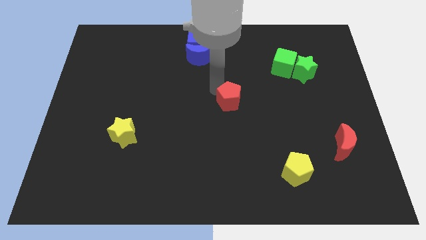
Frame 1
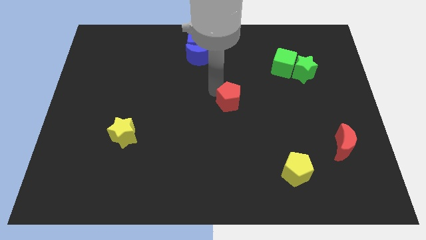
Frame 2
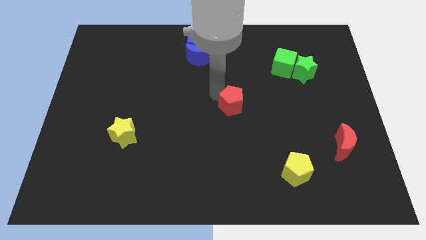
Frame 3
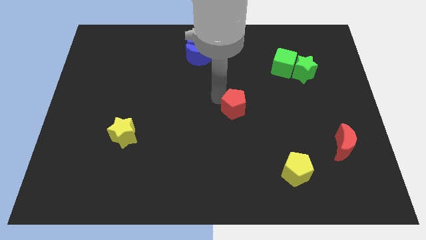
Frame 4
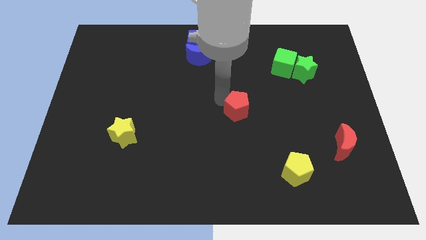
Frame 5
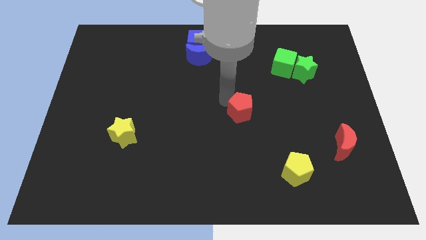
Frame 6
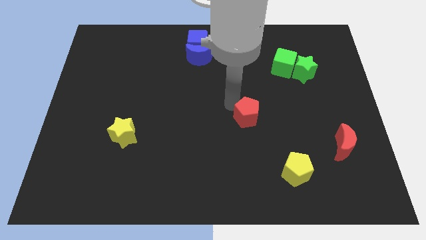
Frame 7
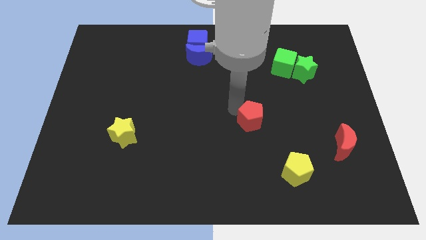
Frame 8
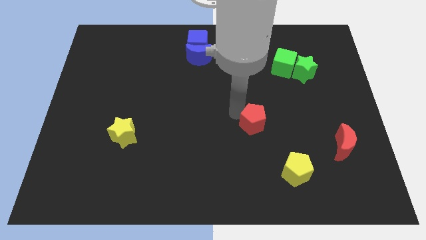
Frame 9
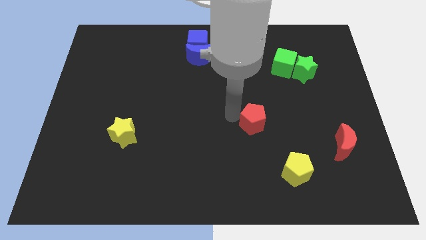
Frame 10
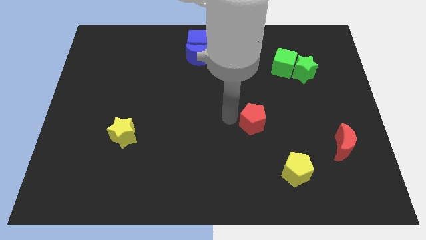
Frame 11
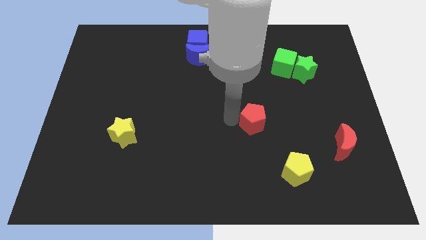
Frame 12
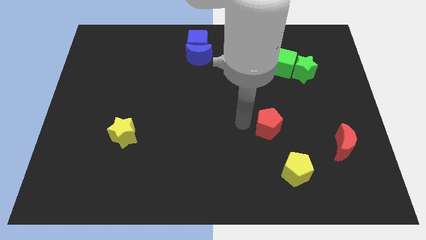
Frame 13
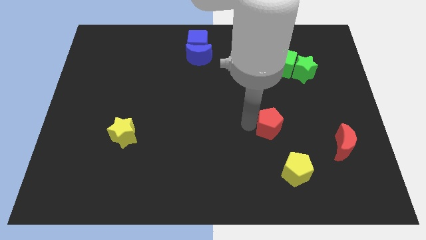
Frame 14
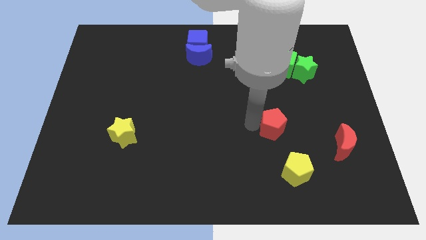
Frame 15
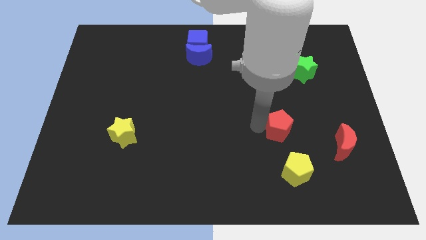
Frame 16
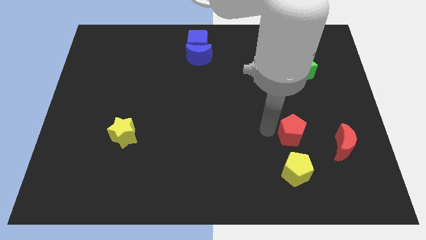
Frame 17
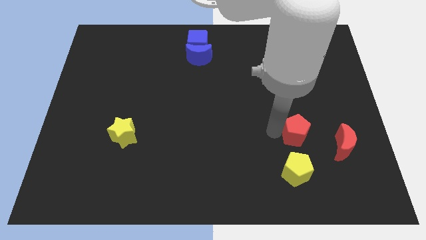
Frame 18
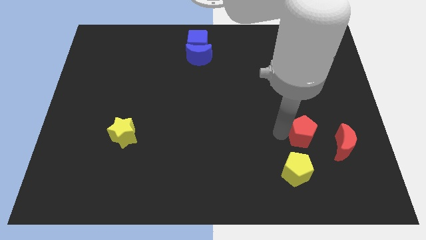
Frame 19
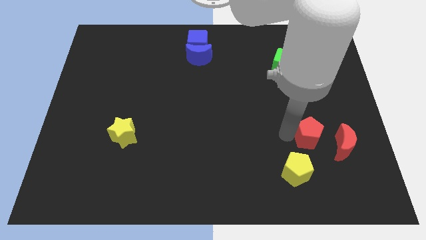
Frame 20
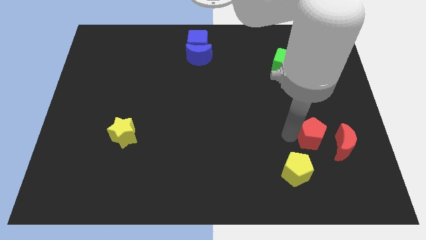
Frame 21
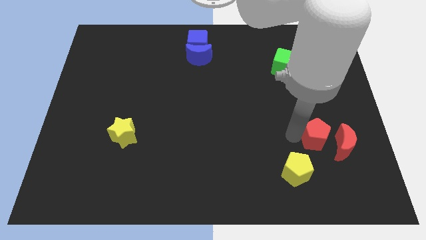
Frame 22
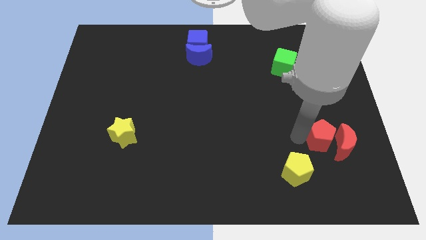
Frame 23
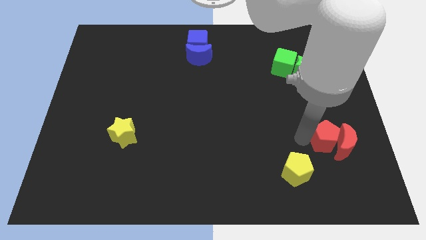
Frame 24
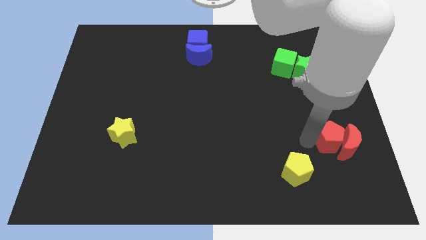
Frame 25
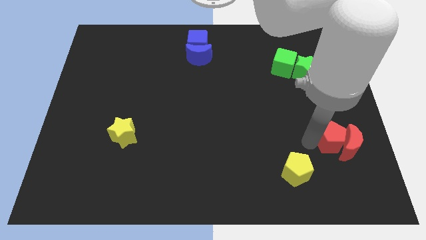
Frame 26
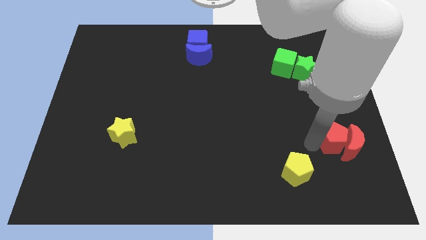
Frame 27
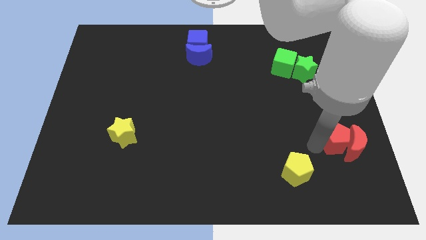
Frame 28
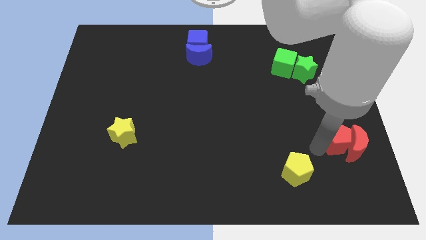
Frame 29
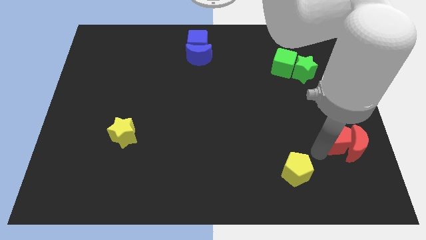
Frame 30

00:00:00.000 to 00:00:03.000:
push red pentagon in to red moon

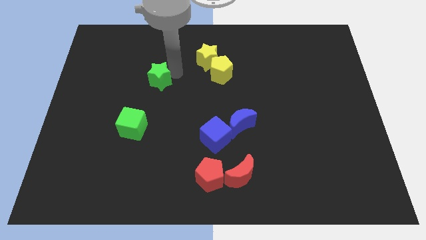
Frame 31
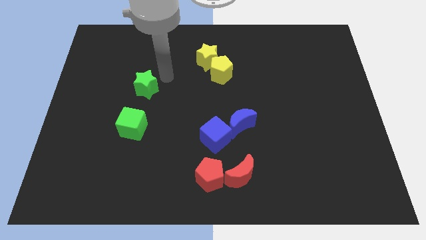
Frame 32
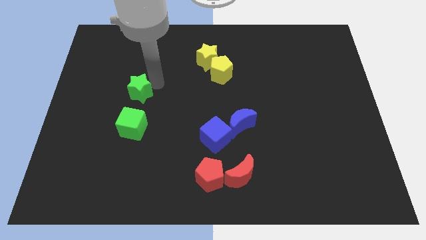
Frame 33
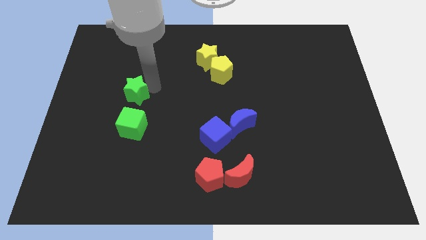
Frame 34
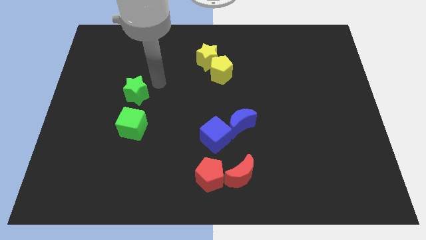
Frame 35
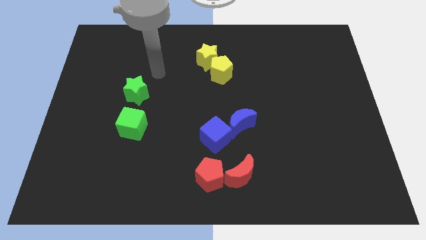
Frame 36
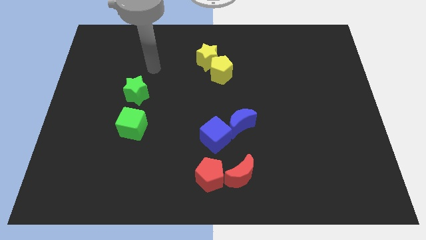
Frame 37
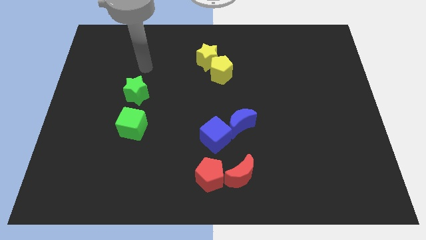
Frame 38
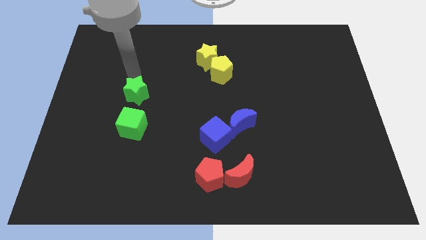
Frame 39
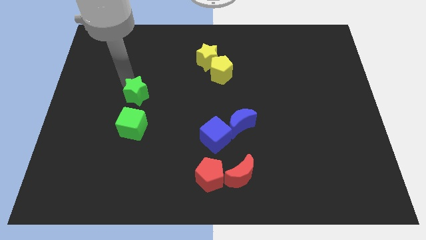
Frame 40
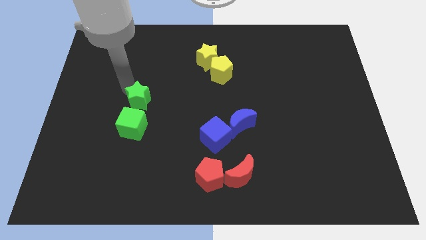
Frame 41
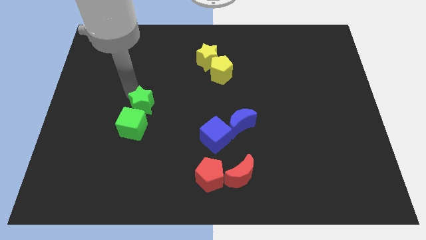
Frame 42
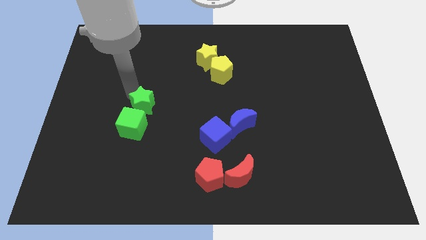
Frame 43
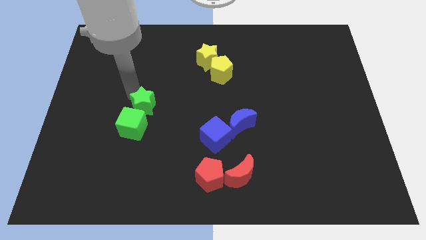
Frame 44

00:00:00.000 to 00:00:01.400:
push the green star close to the green cube

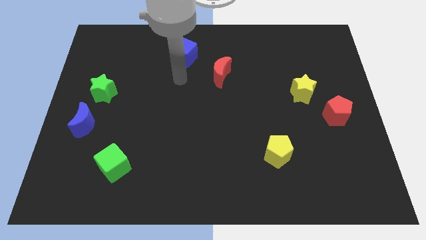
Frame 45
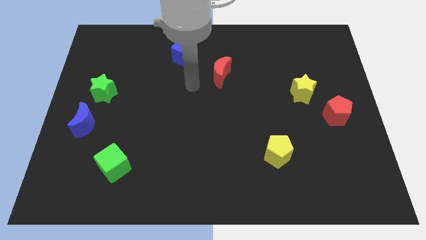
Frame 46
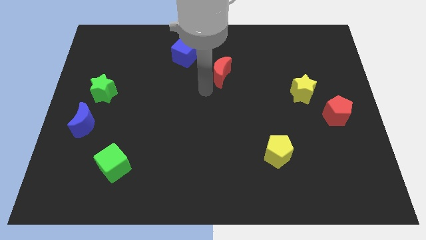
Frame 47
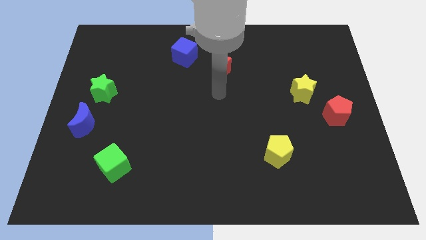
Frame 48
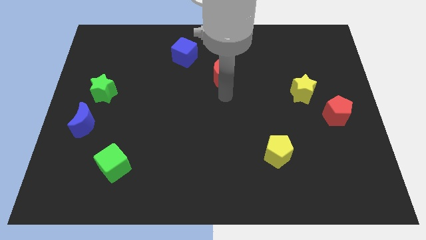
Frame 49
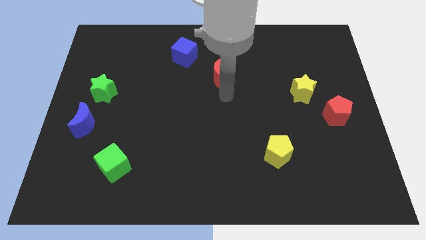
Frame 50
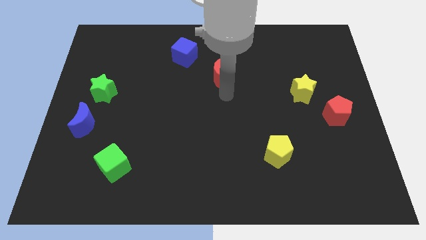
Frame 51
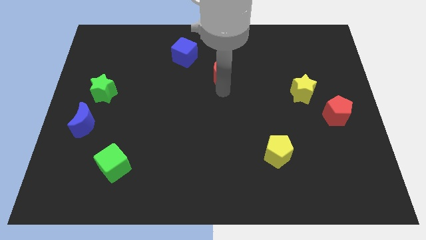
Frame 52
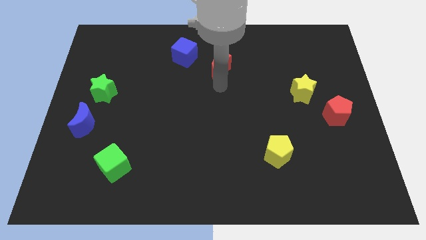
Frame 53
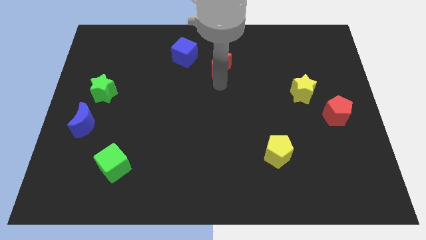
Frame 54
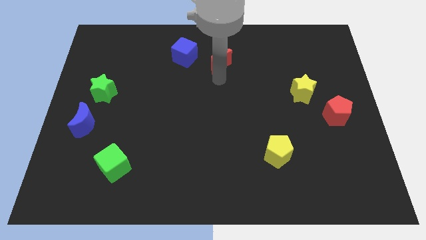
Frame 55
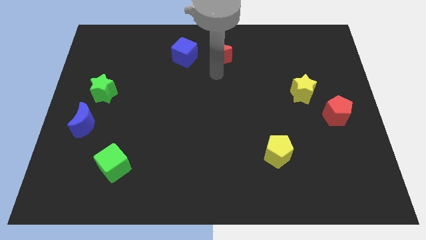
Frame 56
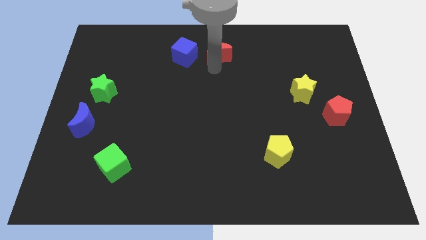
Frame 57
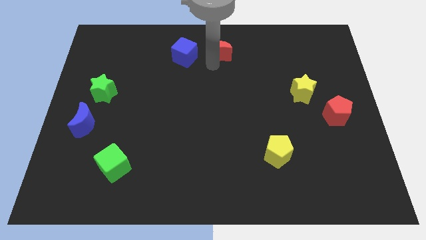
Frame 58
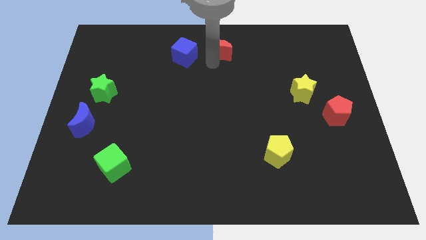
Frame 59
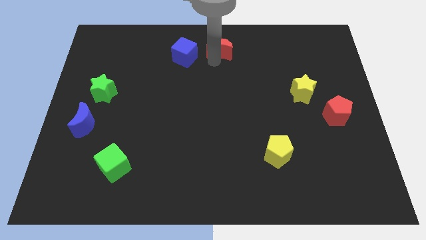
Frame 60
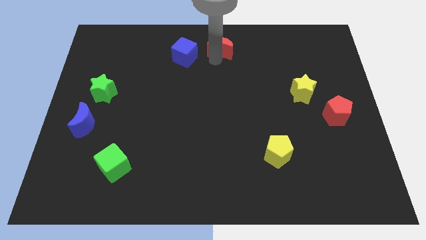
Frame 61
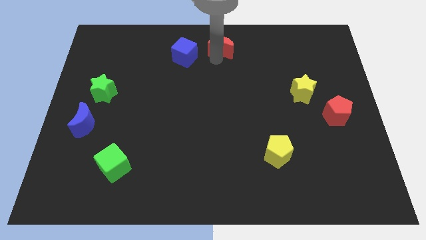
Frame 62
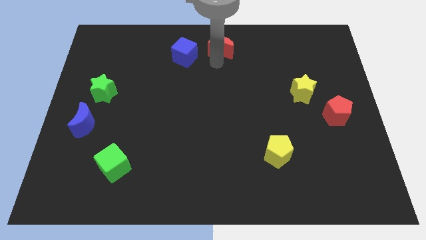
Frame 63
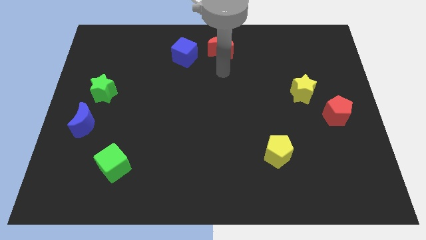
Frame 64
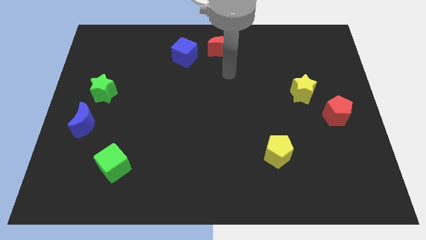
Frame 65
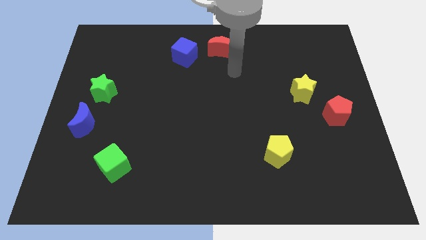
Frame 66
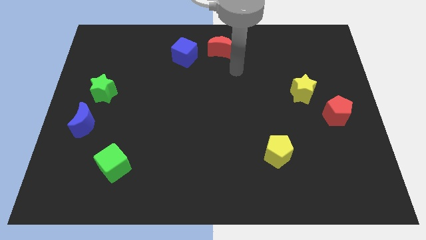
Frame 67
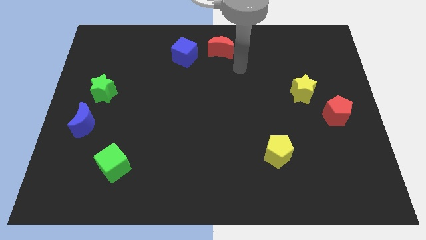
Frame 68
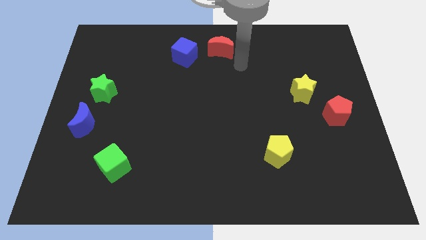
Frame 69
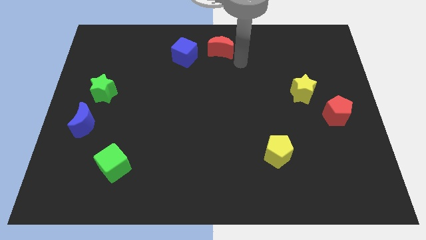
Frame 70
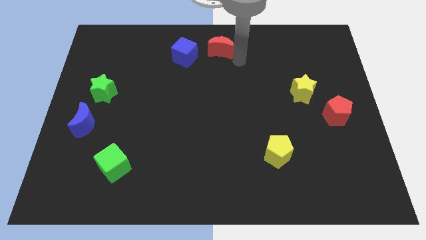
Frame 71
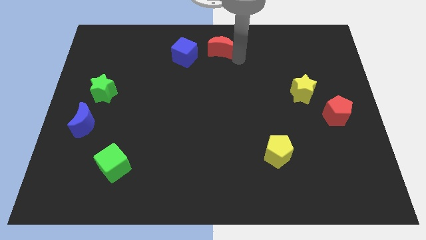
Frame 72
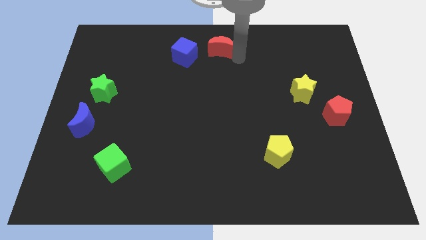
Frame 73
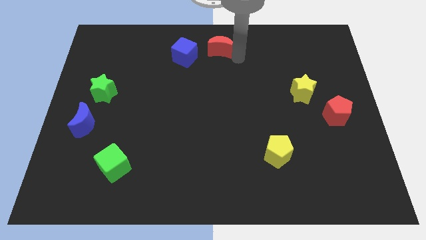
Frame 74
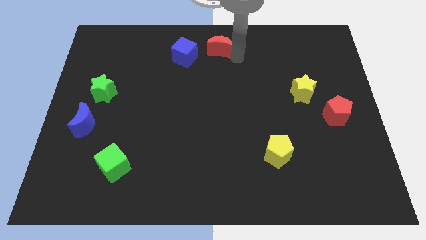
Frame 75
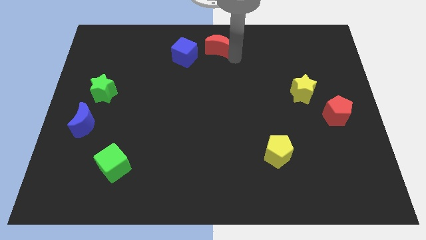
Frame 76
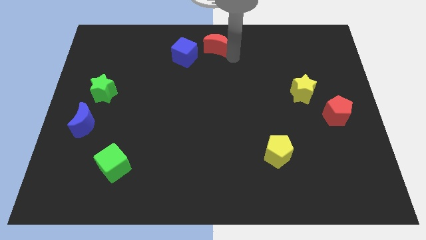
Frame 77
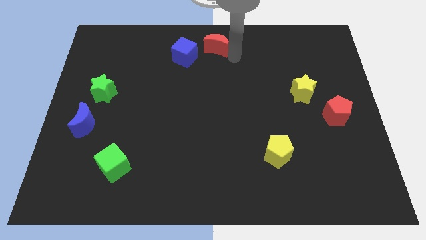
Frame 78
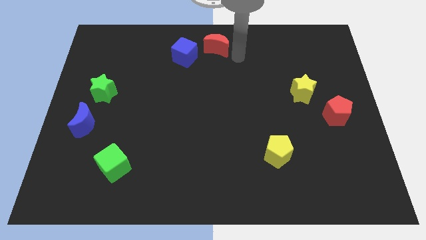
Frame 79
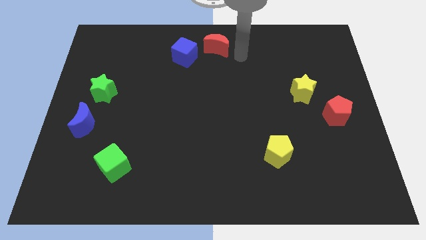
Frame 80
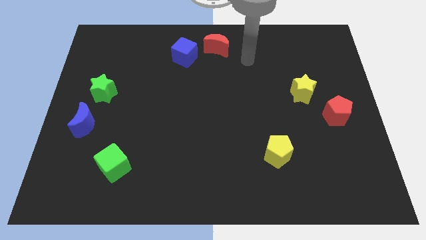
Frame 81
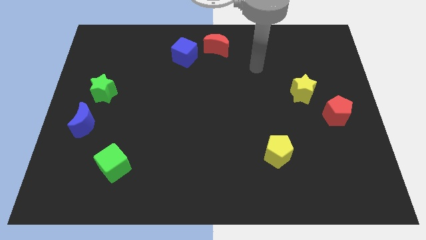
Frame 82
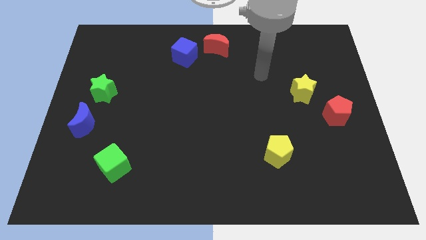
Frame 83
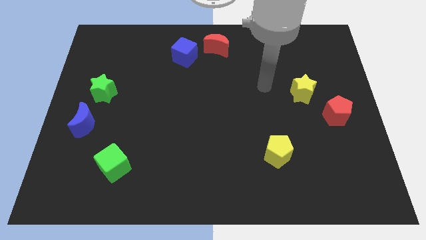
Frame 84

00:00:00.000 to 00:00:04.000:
place red crescent to the right of blue cube

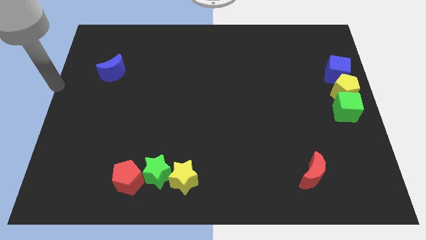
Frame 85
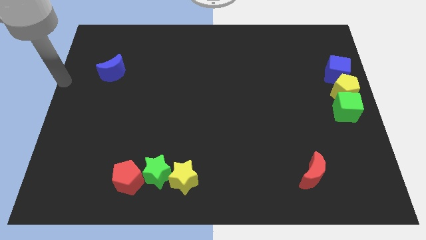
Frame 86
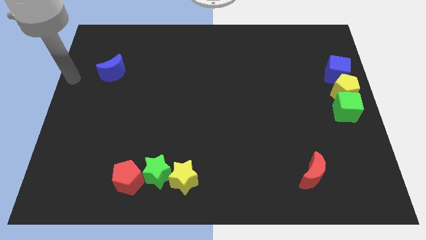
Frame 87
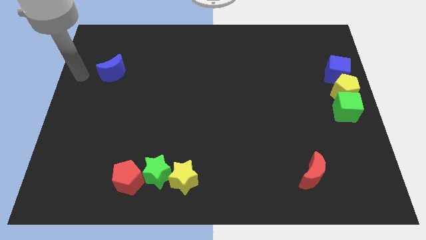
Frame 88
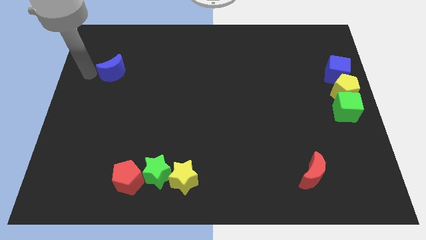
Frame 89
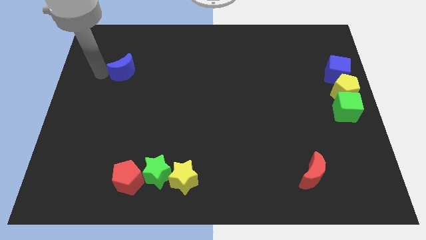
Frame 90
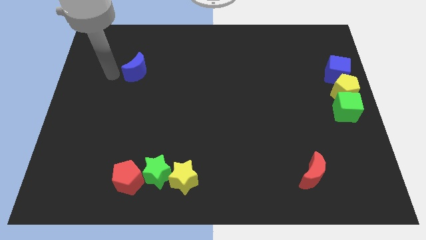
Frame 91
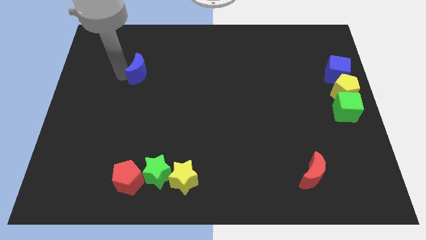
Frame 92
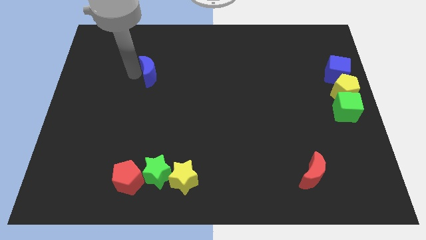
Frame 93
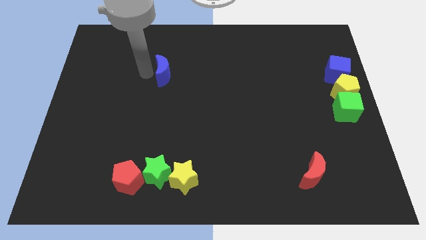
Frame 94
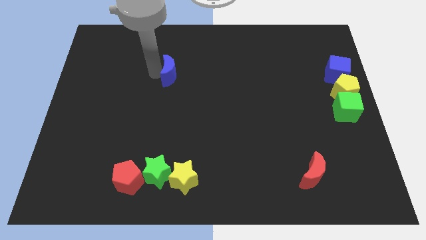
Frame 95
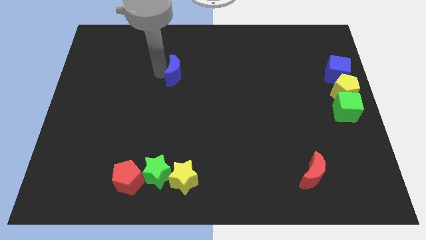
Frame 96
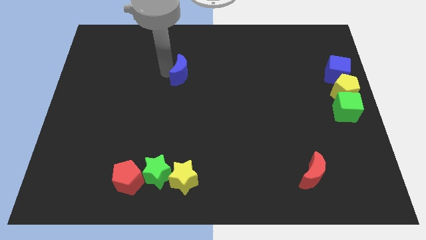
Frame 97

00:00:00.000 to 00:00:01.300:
push the blue moon to the vertical above green star
